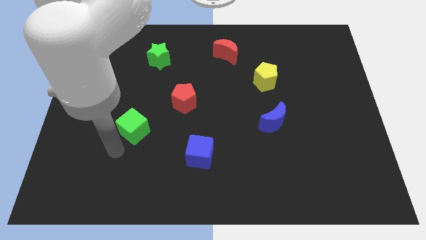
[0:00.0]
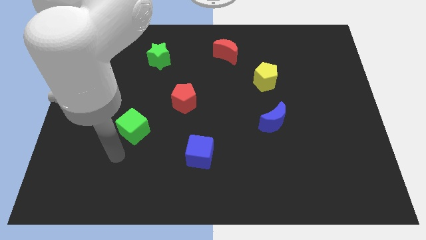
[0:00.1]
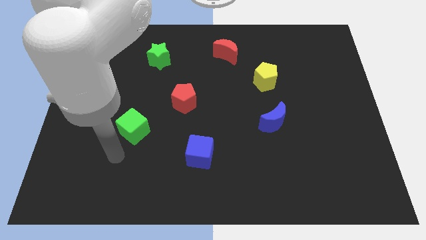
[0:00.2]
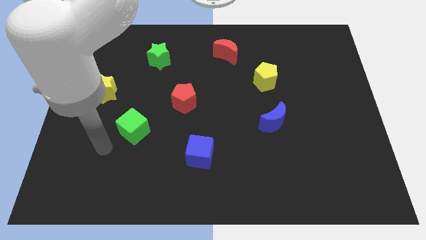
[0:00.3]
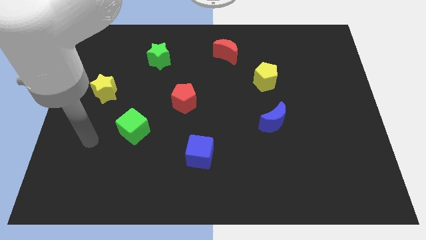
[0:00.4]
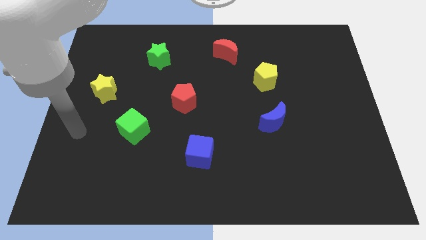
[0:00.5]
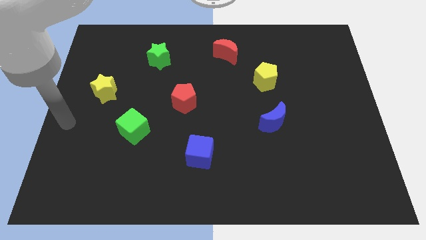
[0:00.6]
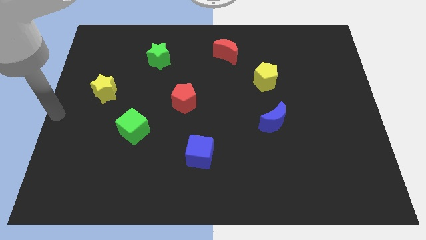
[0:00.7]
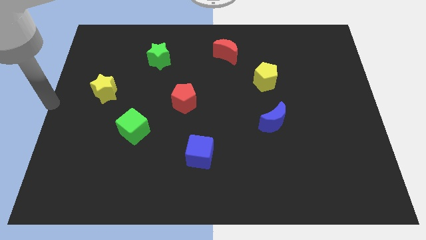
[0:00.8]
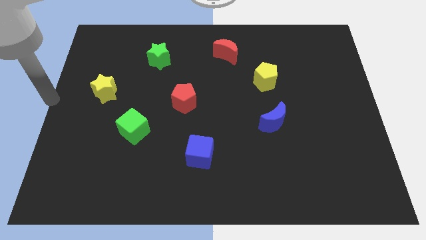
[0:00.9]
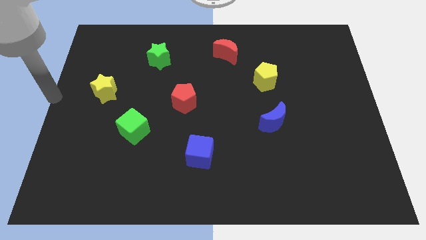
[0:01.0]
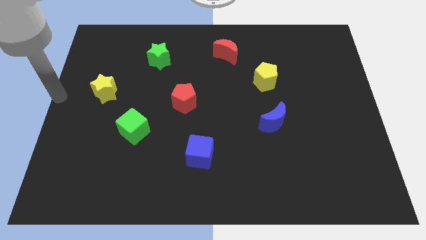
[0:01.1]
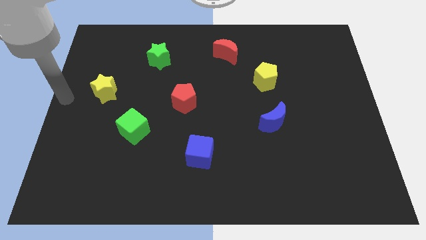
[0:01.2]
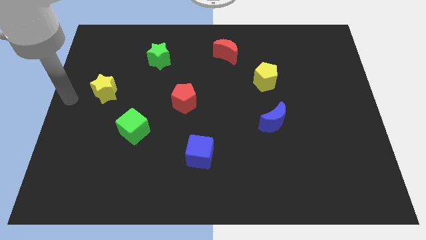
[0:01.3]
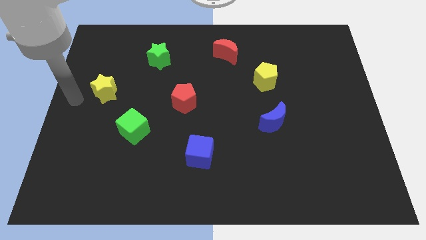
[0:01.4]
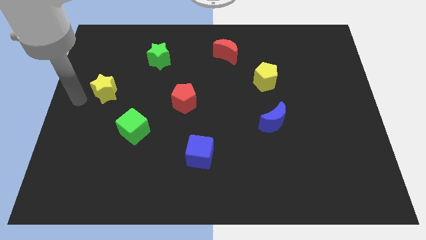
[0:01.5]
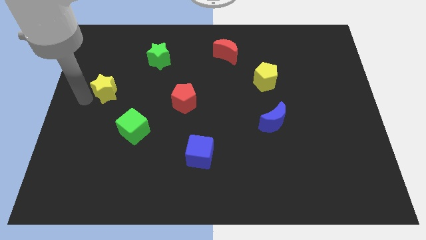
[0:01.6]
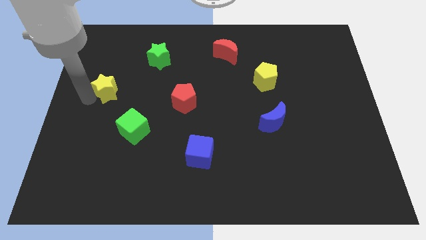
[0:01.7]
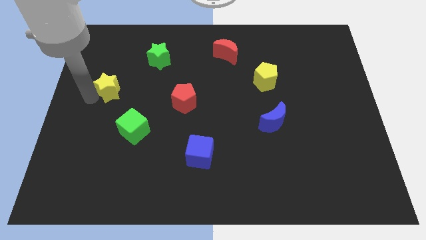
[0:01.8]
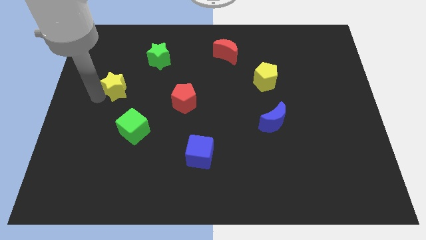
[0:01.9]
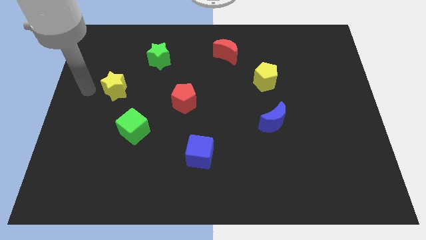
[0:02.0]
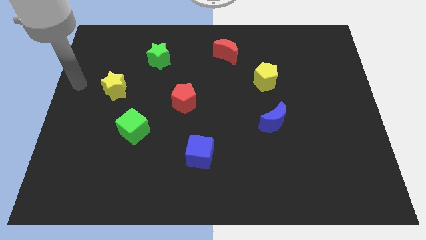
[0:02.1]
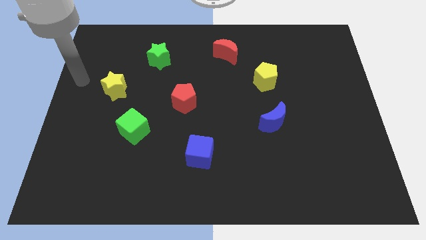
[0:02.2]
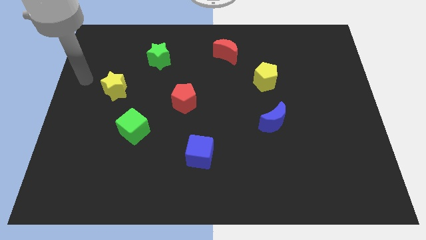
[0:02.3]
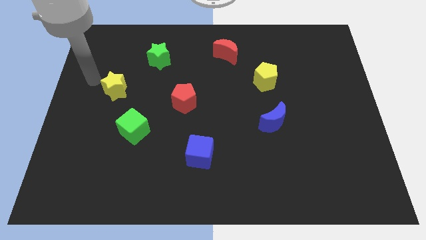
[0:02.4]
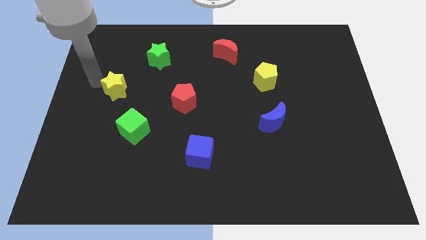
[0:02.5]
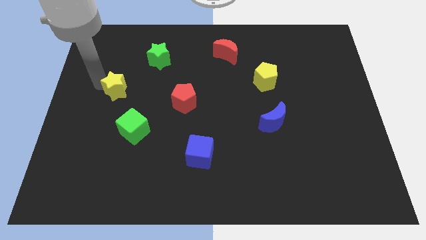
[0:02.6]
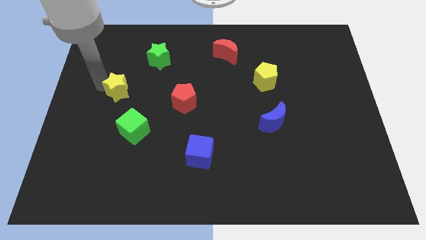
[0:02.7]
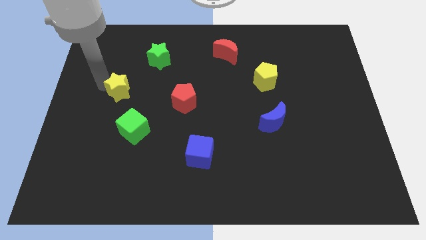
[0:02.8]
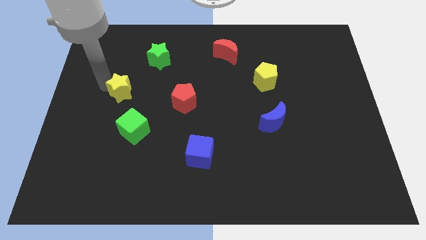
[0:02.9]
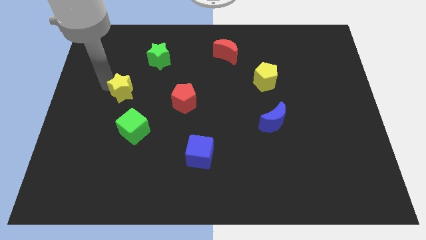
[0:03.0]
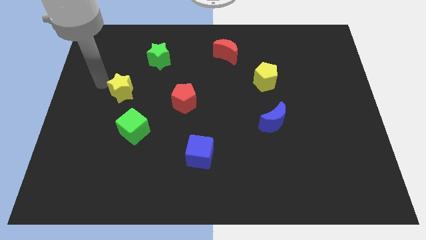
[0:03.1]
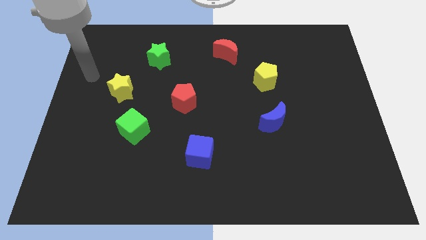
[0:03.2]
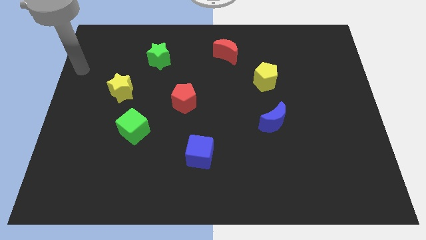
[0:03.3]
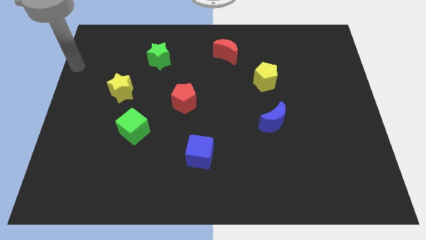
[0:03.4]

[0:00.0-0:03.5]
move yellow star to the top of green cube

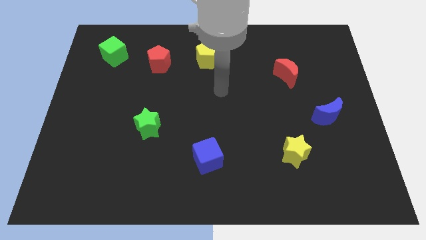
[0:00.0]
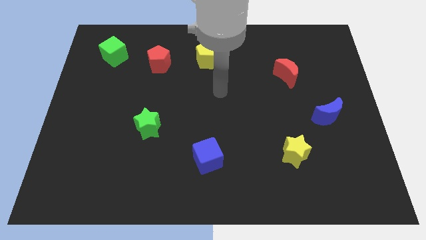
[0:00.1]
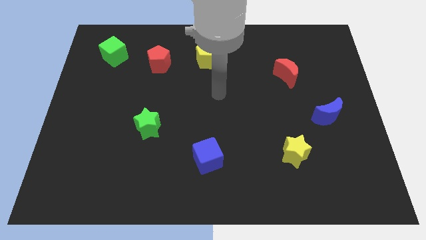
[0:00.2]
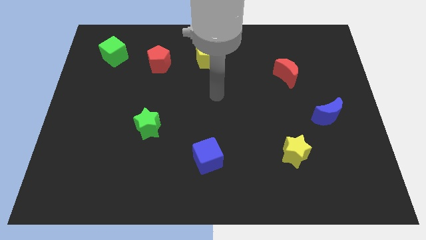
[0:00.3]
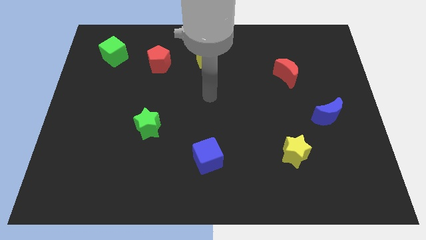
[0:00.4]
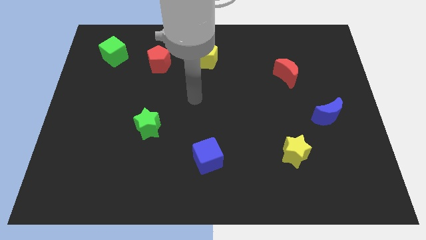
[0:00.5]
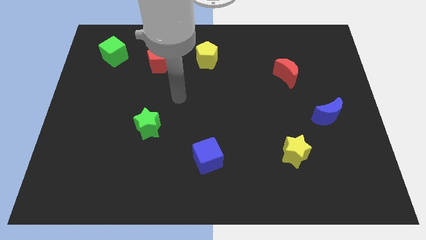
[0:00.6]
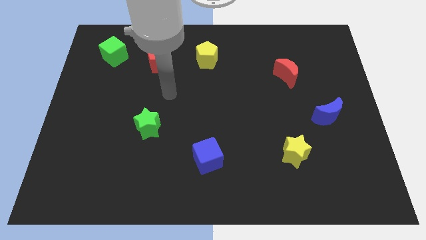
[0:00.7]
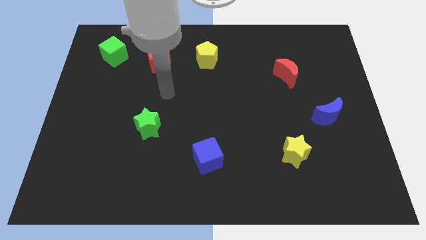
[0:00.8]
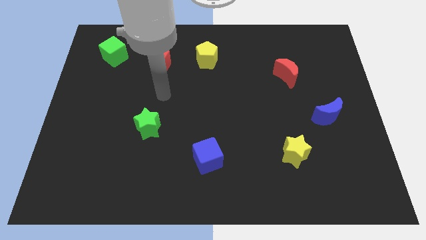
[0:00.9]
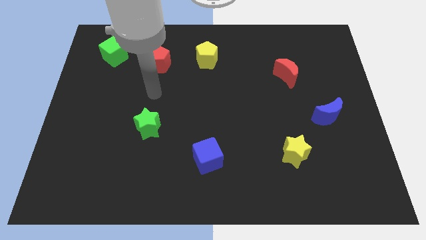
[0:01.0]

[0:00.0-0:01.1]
put your arm in between the red pentagon and green star

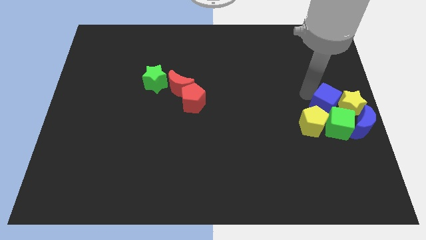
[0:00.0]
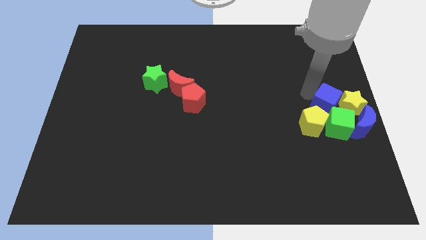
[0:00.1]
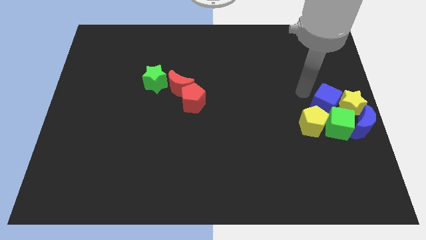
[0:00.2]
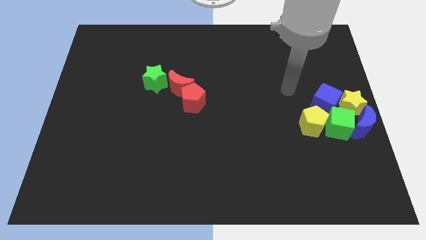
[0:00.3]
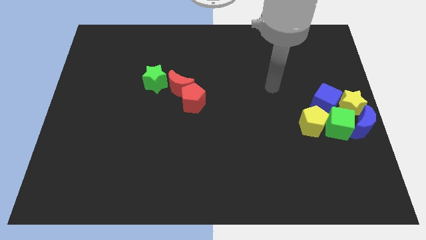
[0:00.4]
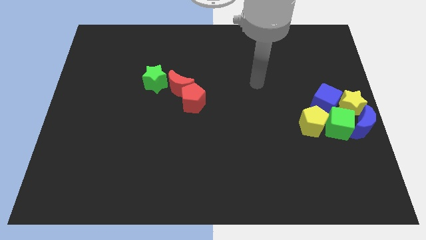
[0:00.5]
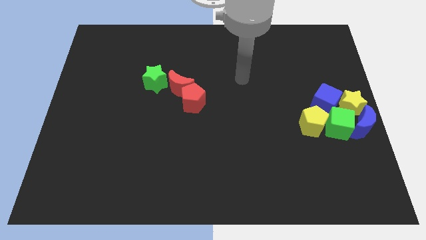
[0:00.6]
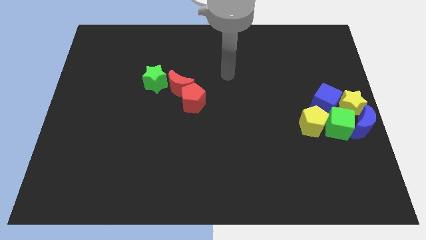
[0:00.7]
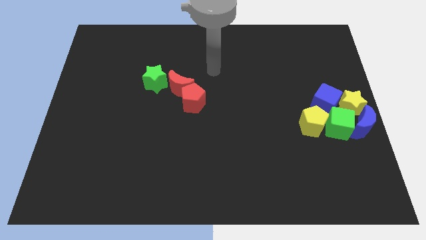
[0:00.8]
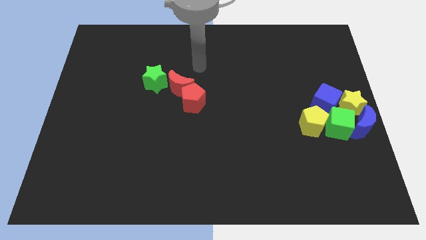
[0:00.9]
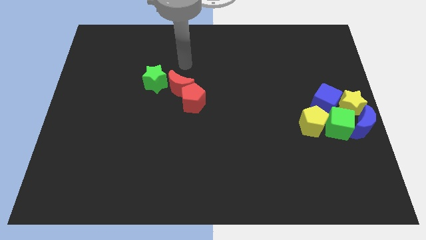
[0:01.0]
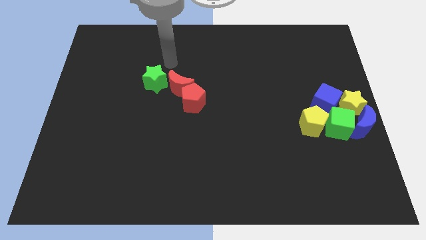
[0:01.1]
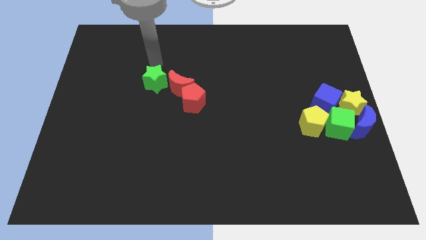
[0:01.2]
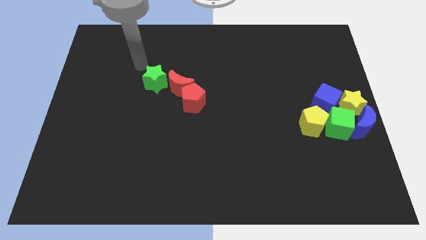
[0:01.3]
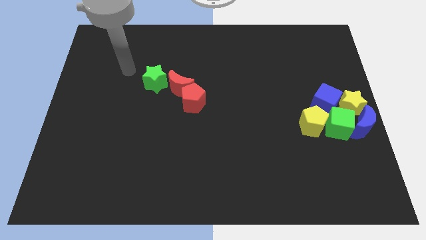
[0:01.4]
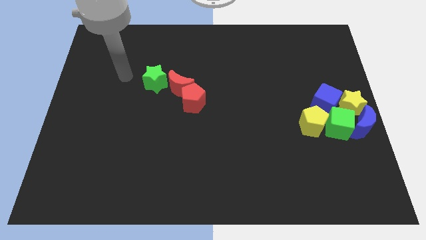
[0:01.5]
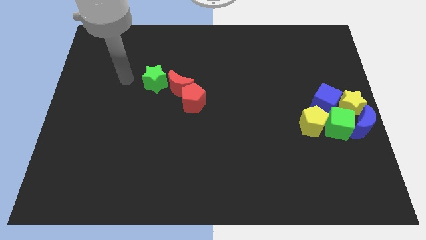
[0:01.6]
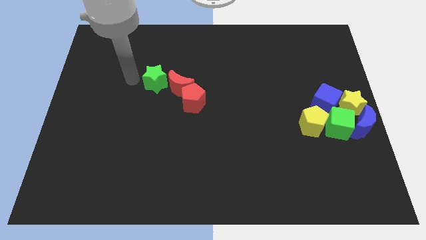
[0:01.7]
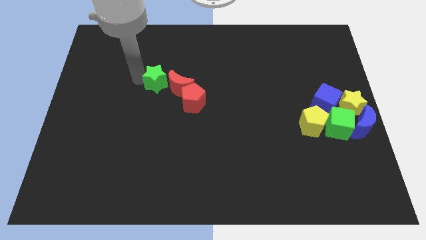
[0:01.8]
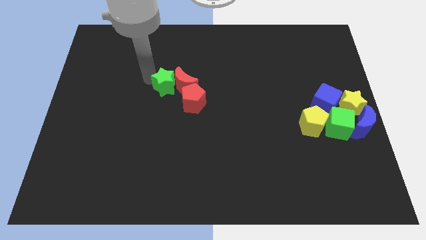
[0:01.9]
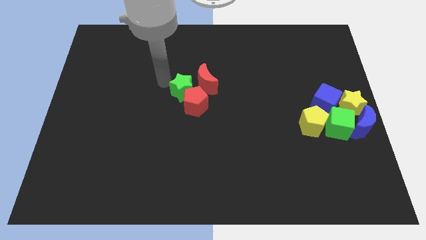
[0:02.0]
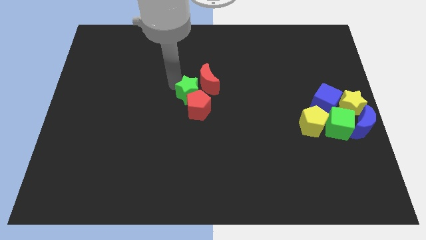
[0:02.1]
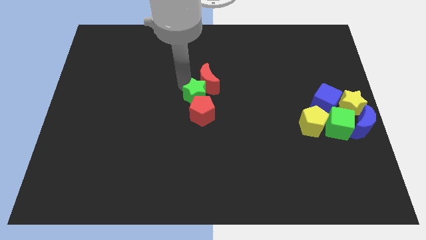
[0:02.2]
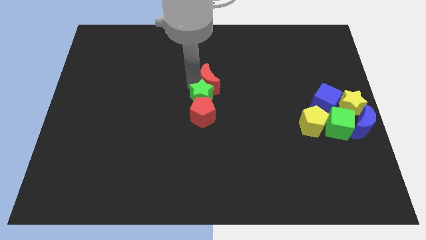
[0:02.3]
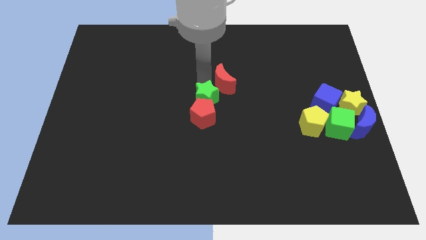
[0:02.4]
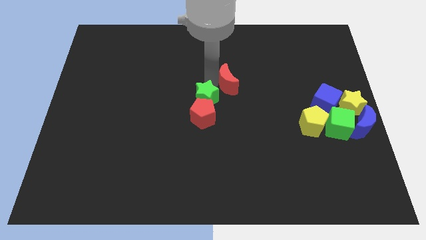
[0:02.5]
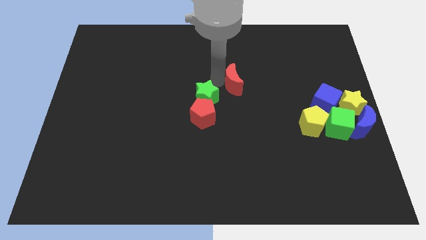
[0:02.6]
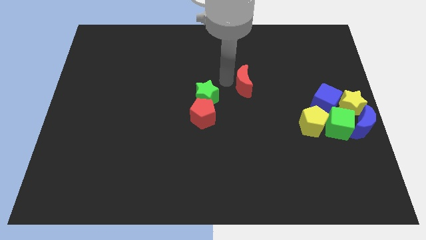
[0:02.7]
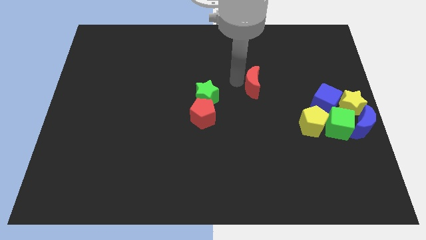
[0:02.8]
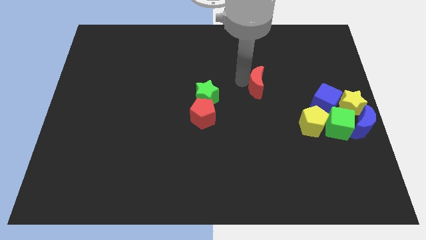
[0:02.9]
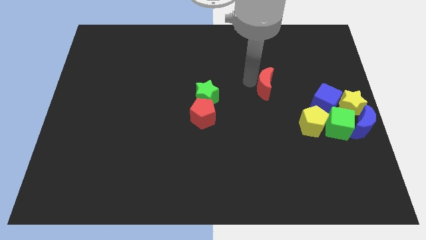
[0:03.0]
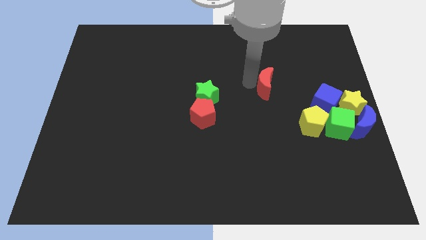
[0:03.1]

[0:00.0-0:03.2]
push red crescent slightly towards right

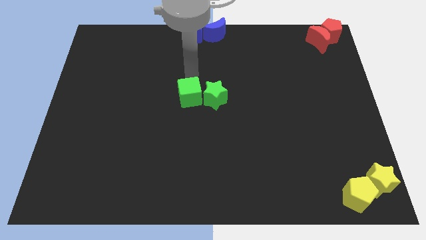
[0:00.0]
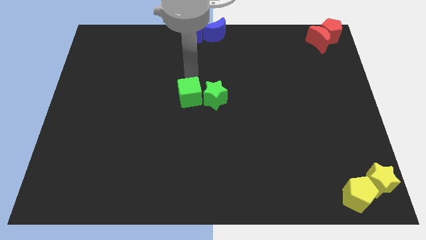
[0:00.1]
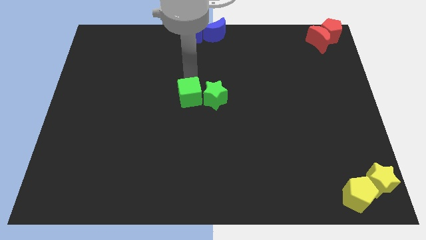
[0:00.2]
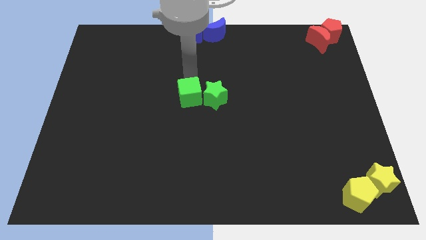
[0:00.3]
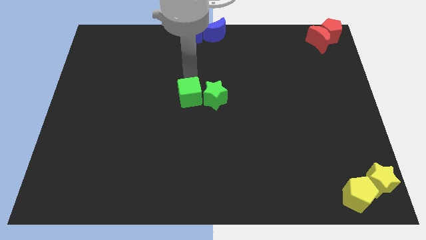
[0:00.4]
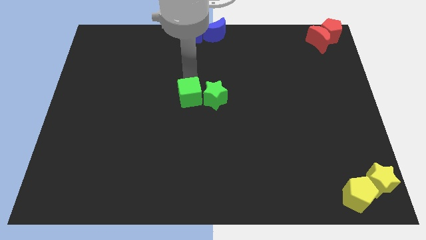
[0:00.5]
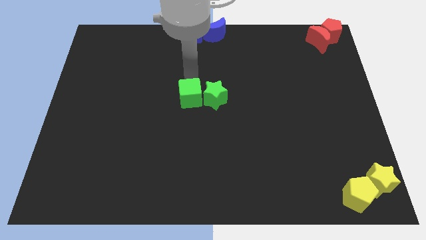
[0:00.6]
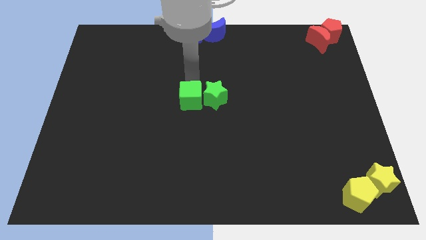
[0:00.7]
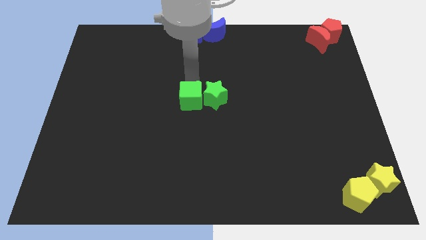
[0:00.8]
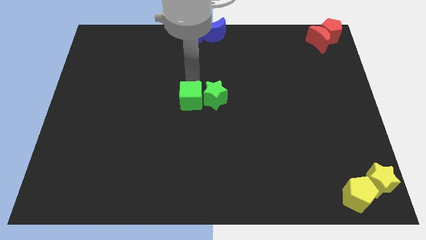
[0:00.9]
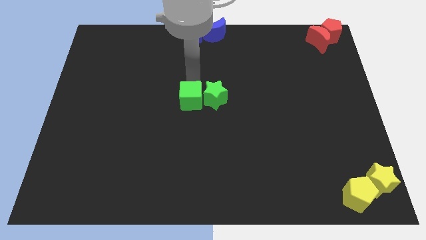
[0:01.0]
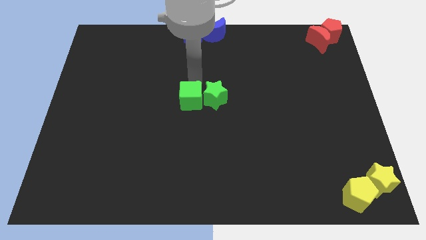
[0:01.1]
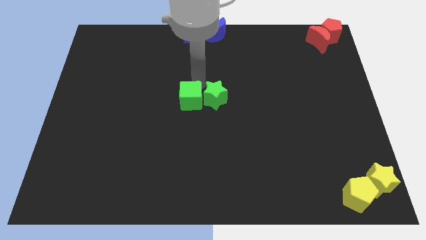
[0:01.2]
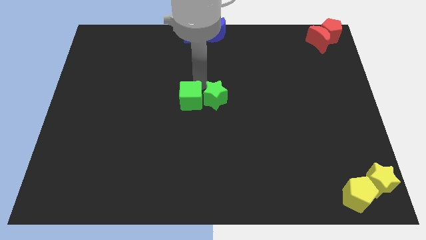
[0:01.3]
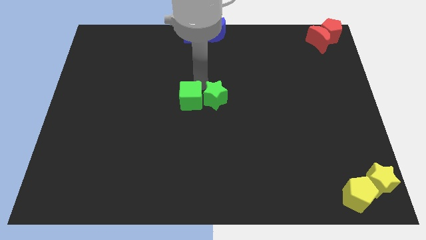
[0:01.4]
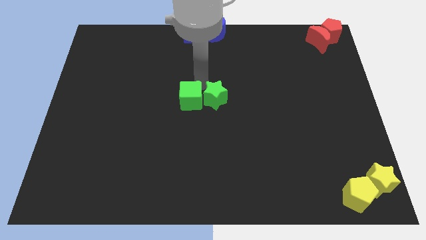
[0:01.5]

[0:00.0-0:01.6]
push the green cube slightly down
